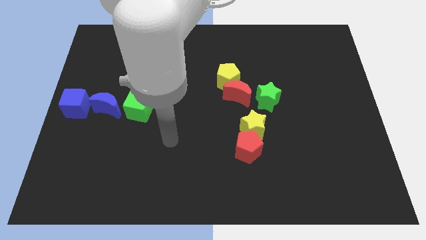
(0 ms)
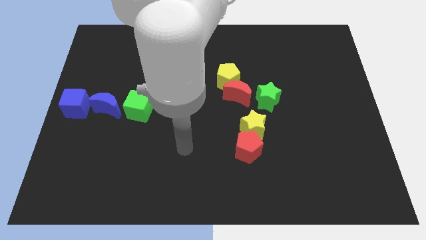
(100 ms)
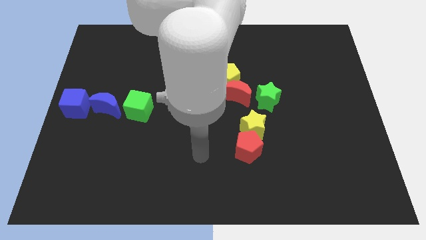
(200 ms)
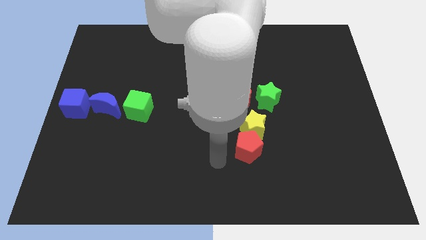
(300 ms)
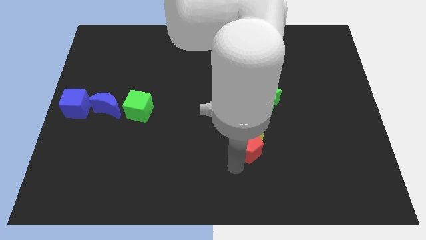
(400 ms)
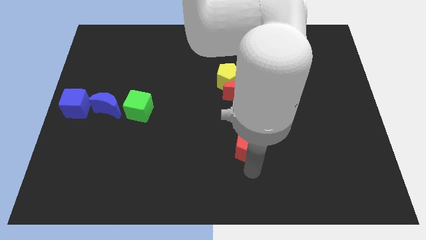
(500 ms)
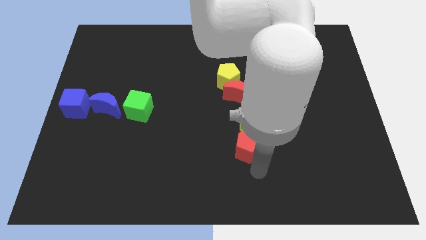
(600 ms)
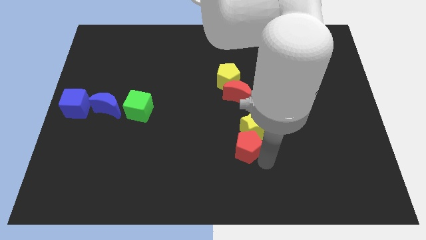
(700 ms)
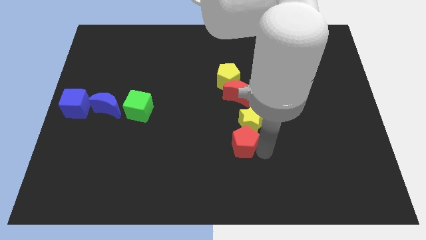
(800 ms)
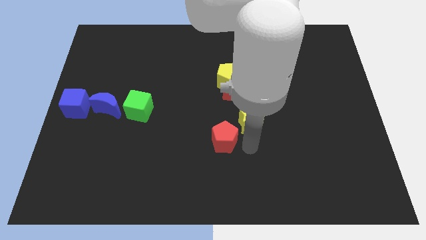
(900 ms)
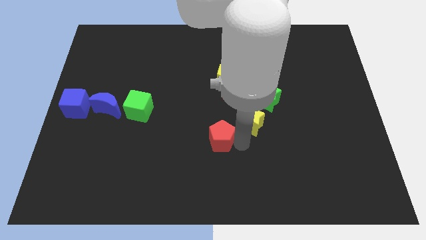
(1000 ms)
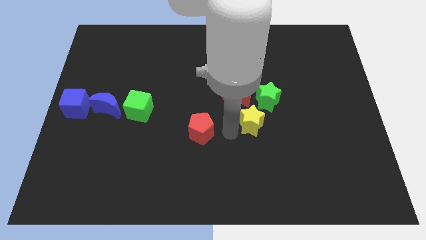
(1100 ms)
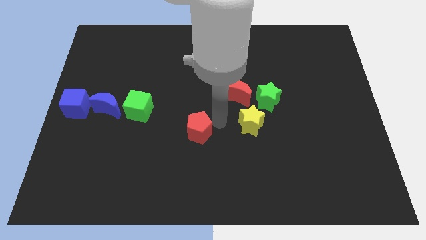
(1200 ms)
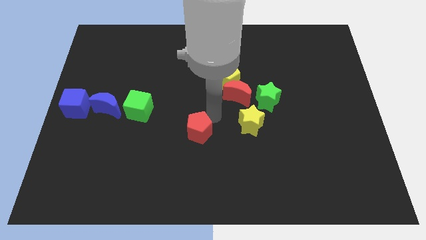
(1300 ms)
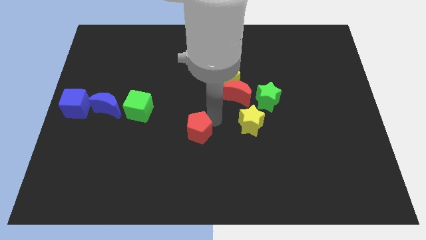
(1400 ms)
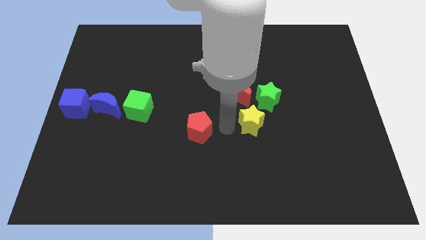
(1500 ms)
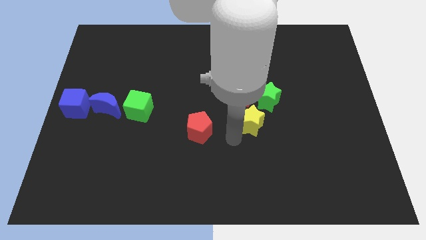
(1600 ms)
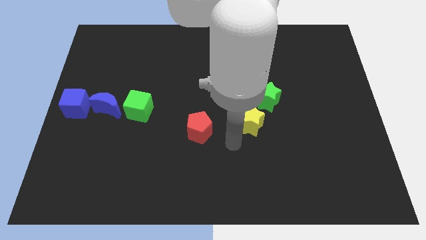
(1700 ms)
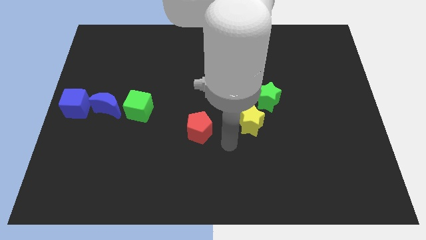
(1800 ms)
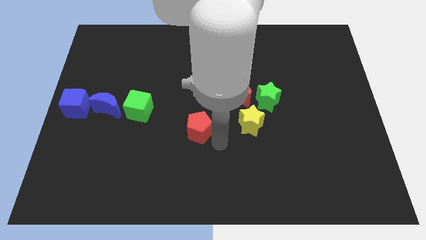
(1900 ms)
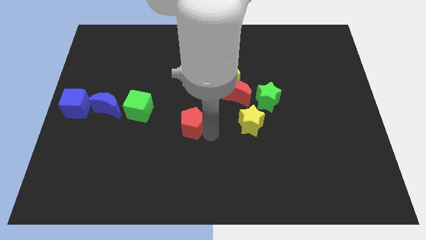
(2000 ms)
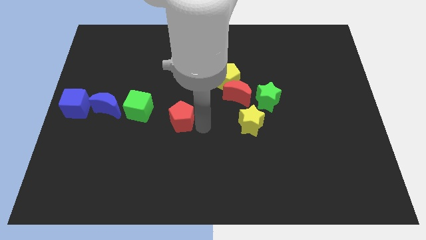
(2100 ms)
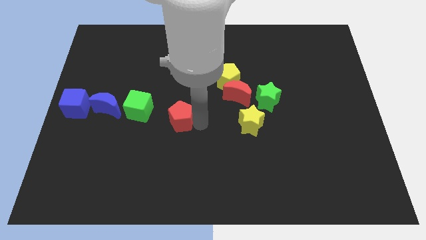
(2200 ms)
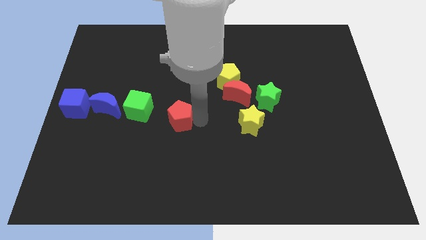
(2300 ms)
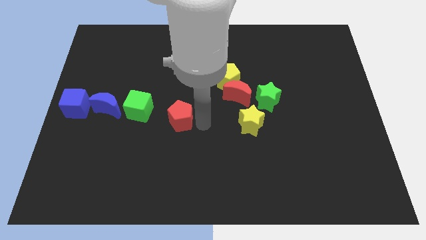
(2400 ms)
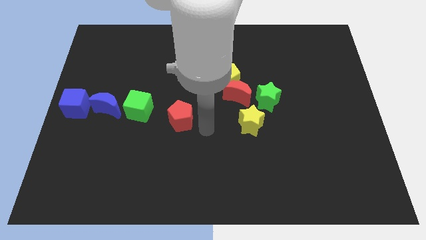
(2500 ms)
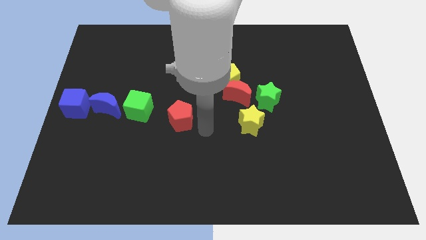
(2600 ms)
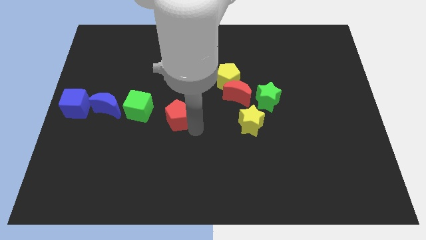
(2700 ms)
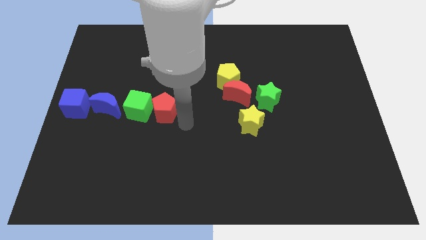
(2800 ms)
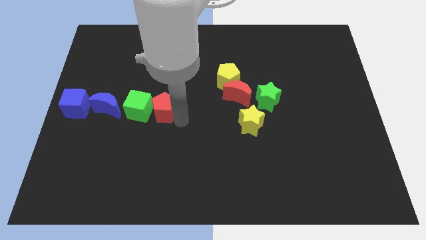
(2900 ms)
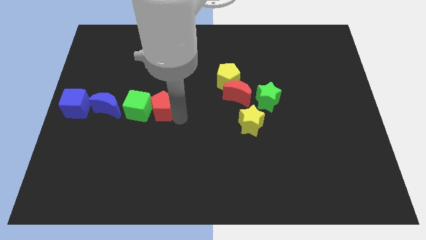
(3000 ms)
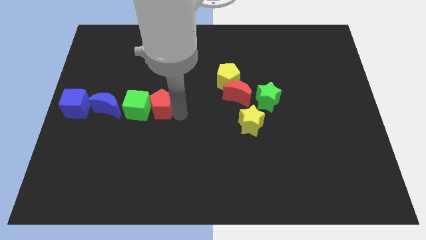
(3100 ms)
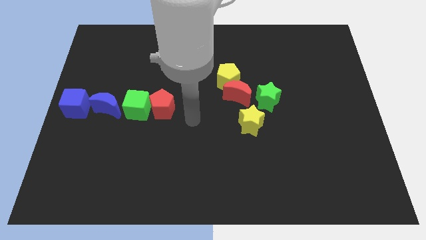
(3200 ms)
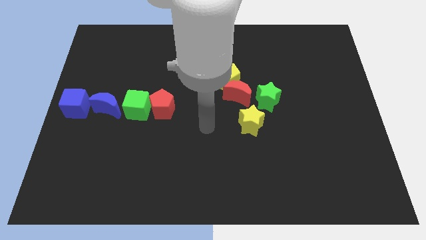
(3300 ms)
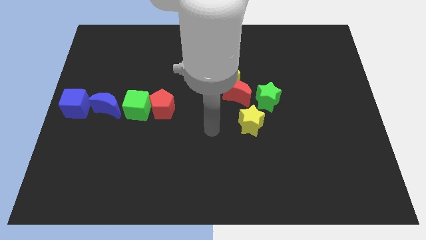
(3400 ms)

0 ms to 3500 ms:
push the red pentagon into the green cube

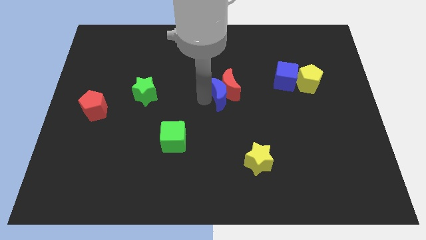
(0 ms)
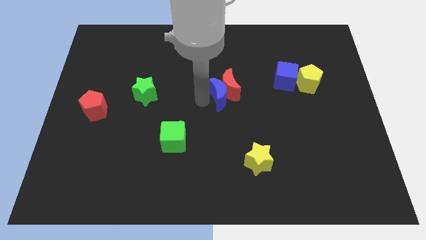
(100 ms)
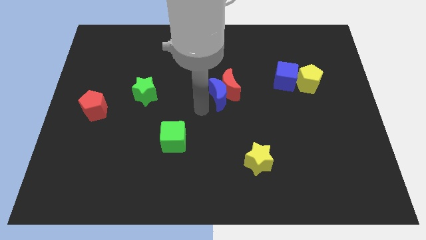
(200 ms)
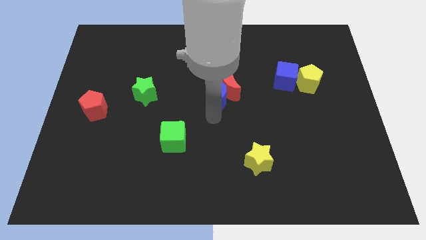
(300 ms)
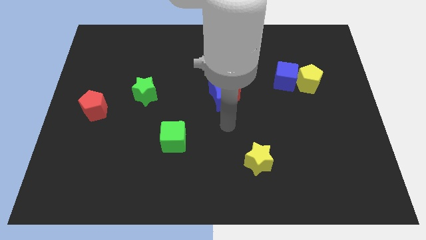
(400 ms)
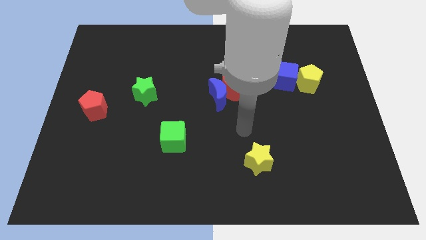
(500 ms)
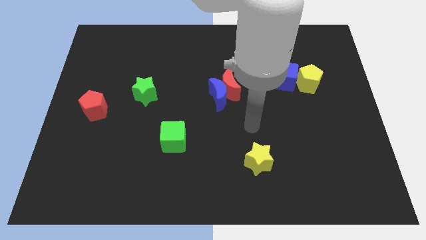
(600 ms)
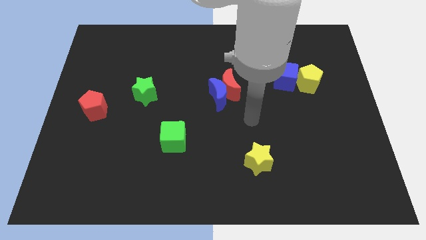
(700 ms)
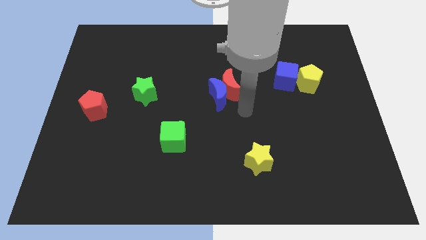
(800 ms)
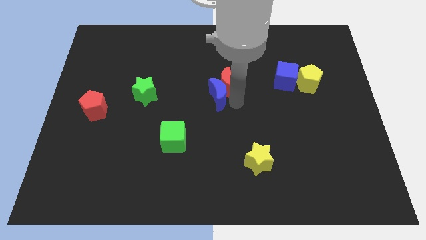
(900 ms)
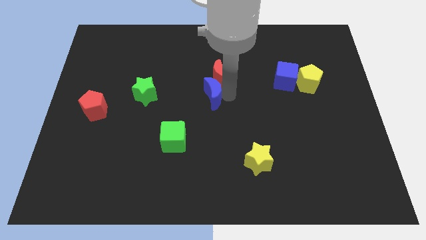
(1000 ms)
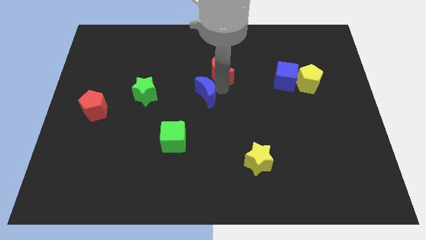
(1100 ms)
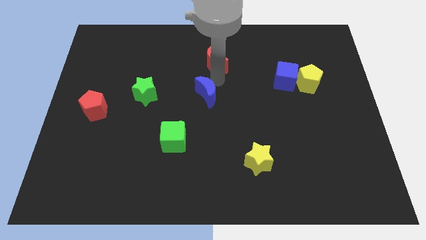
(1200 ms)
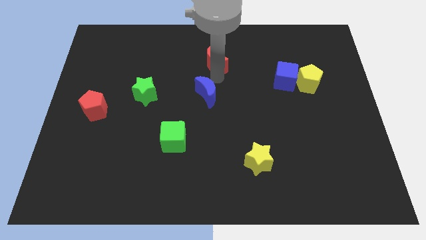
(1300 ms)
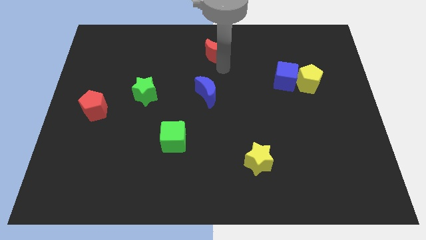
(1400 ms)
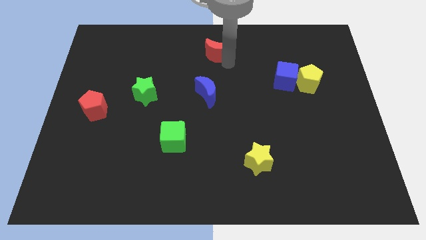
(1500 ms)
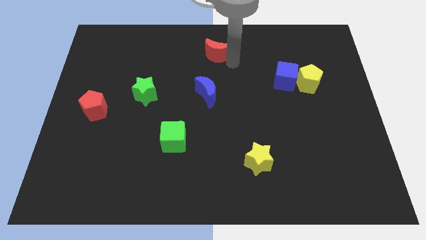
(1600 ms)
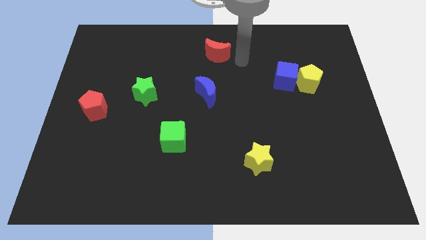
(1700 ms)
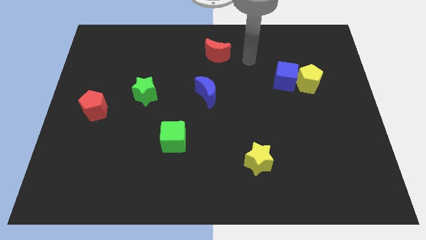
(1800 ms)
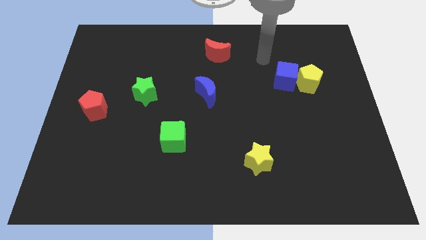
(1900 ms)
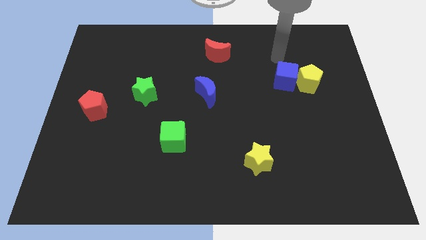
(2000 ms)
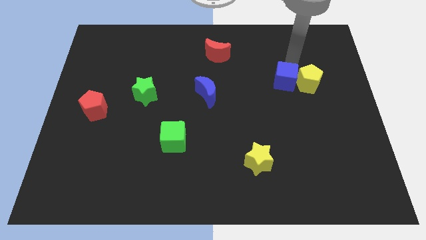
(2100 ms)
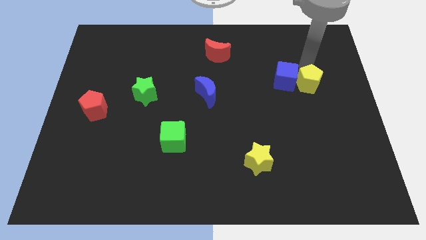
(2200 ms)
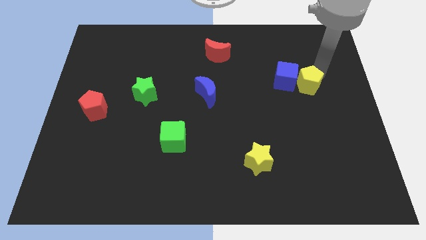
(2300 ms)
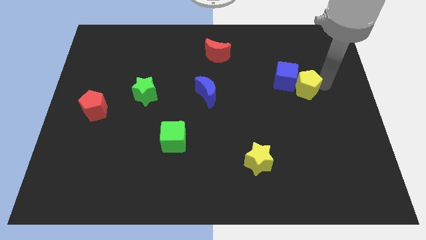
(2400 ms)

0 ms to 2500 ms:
push the red moon away from the blue moon and go away

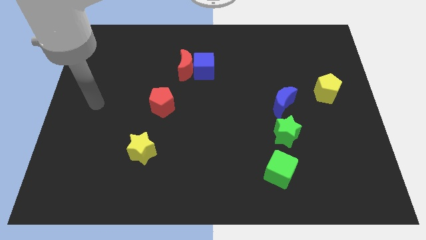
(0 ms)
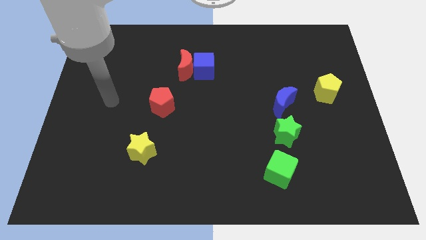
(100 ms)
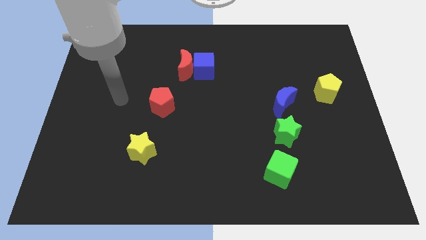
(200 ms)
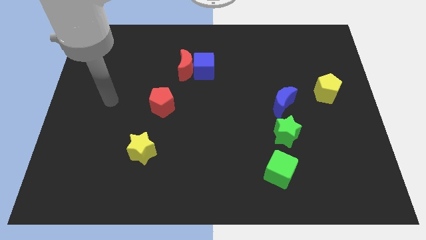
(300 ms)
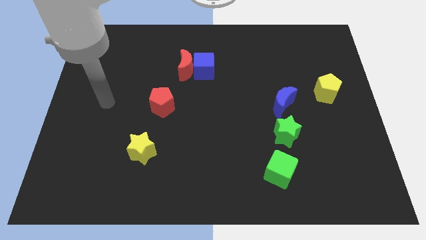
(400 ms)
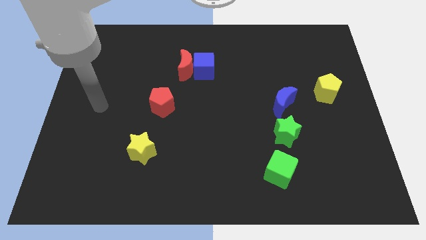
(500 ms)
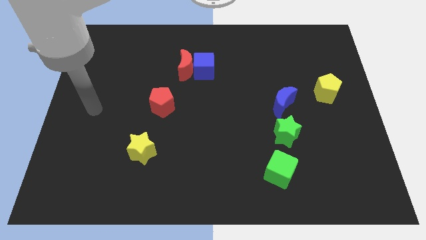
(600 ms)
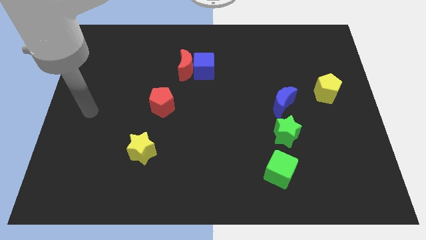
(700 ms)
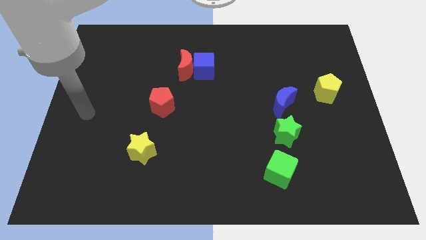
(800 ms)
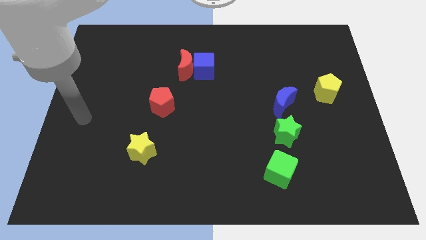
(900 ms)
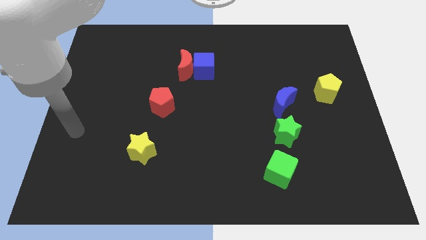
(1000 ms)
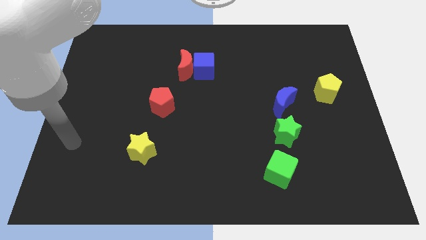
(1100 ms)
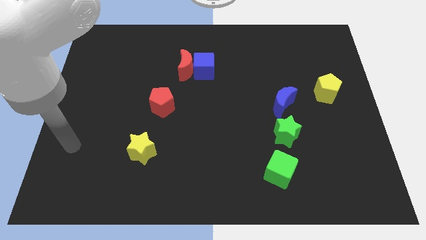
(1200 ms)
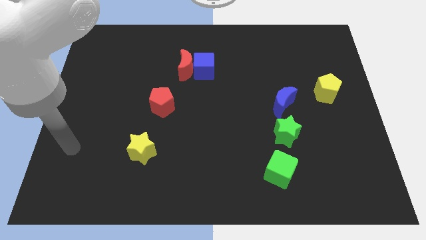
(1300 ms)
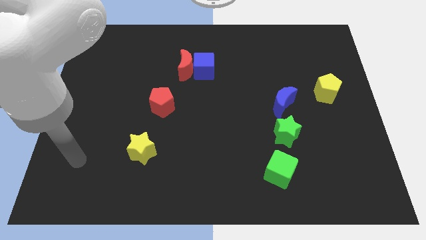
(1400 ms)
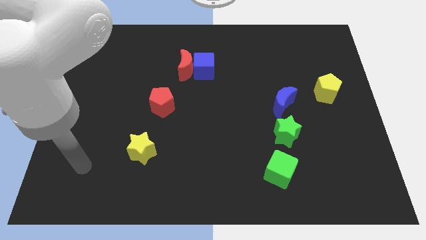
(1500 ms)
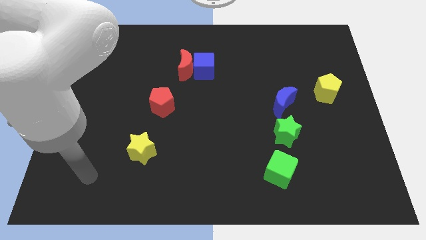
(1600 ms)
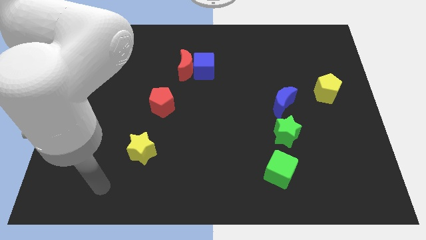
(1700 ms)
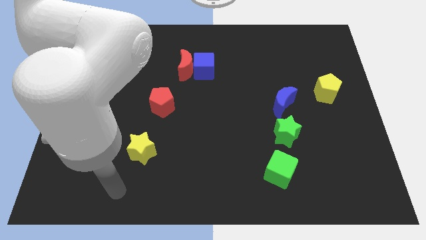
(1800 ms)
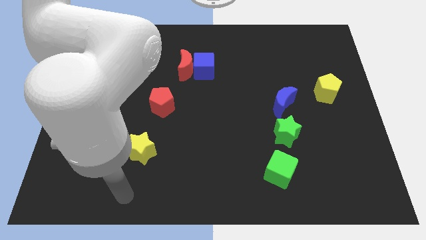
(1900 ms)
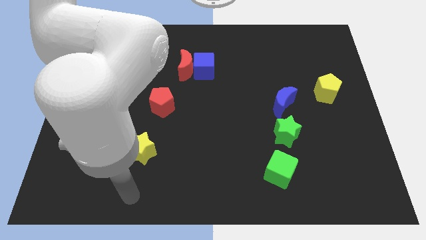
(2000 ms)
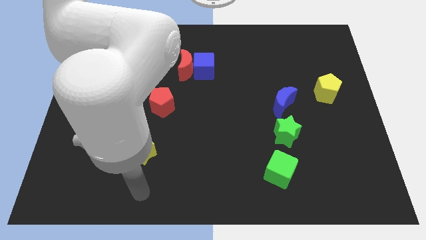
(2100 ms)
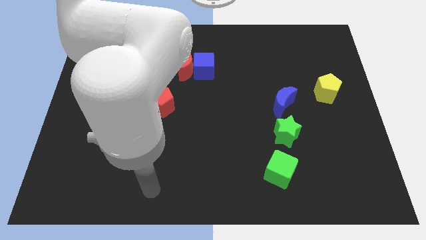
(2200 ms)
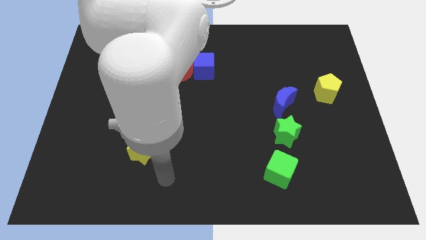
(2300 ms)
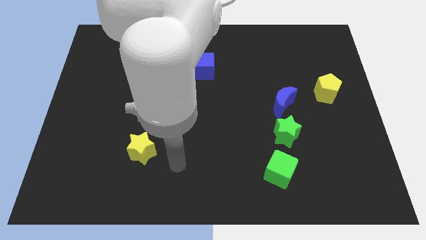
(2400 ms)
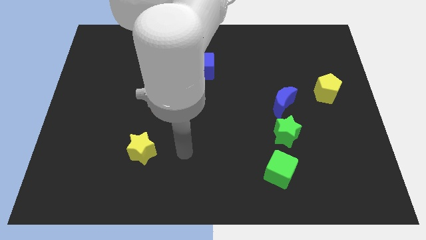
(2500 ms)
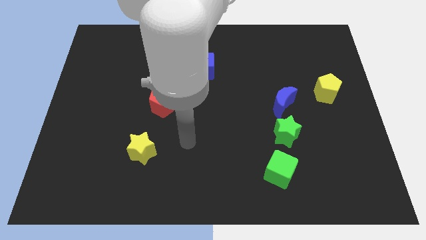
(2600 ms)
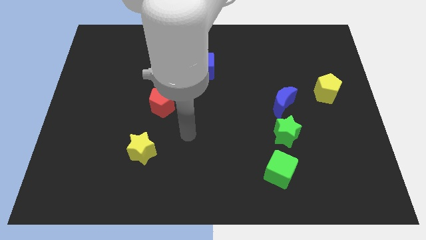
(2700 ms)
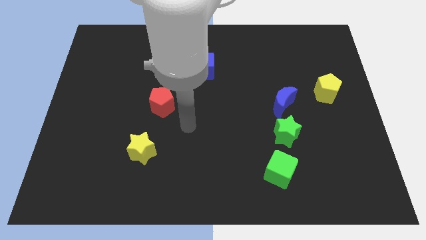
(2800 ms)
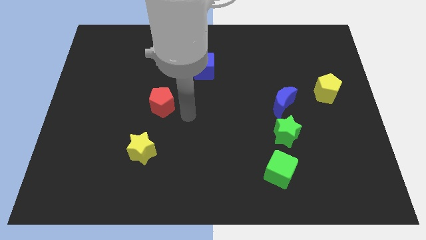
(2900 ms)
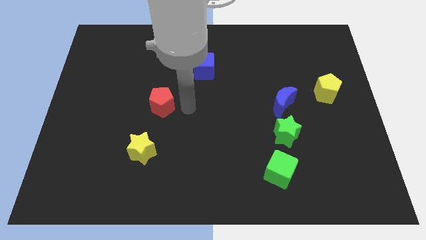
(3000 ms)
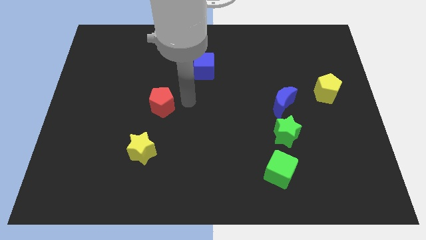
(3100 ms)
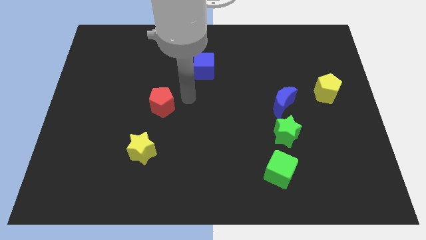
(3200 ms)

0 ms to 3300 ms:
move your arm towards the red pentagon
